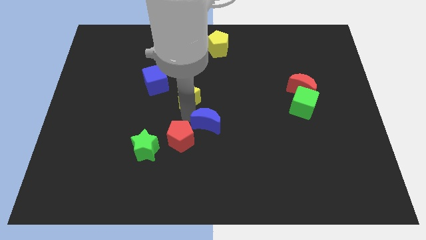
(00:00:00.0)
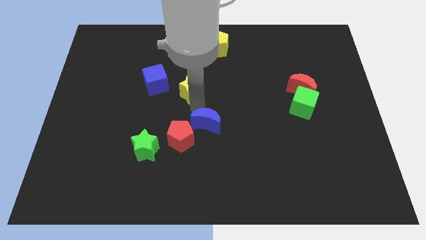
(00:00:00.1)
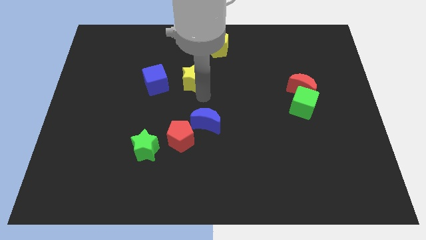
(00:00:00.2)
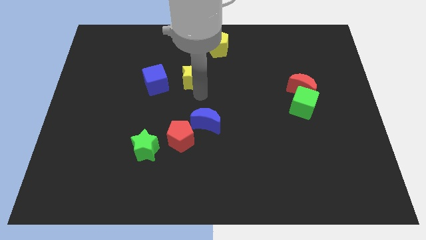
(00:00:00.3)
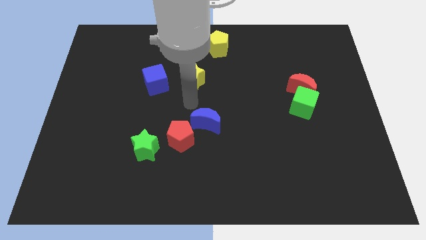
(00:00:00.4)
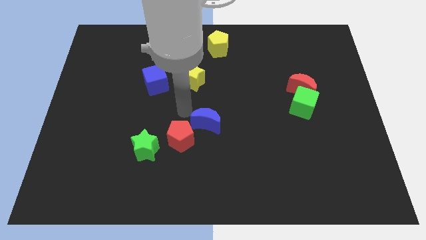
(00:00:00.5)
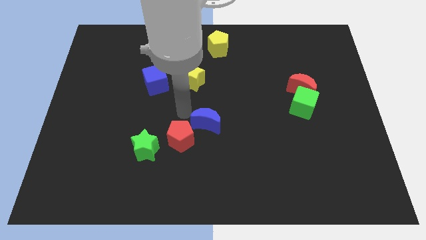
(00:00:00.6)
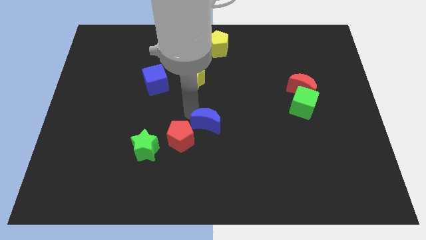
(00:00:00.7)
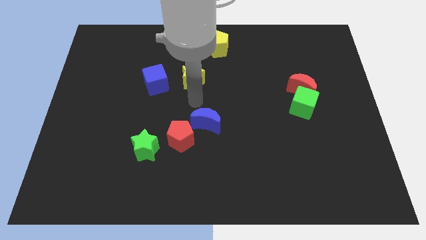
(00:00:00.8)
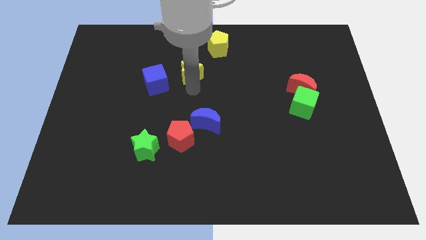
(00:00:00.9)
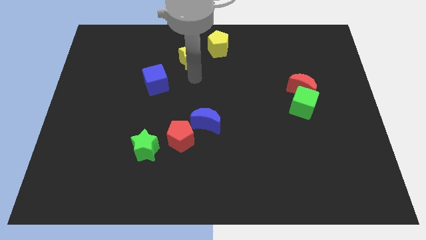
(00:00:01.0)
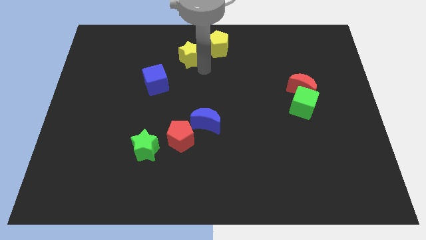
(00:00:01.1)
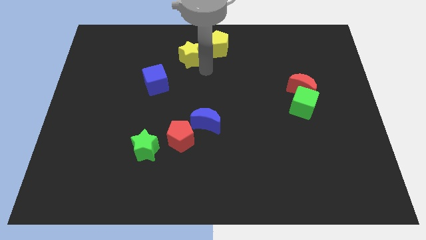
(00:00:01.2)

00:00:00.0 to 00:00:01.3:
push yellow star towards yellow pentagon

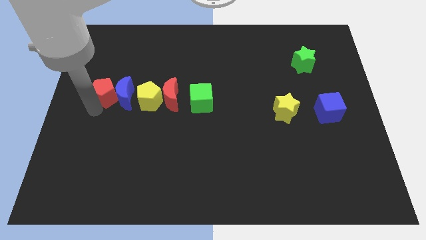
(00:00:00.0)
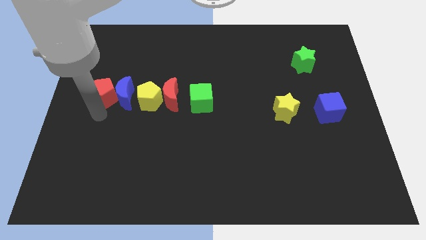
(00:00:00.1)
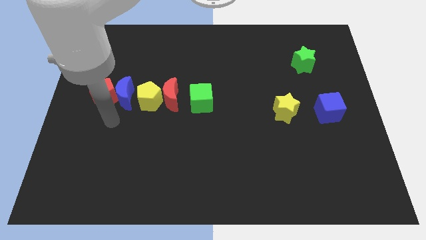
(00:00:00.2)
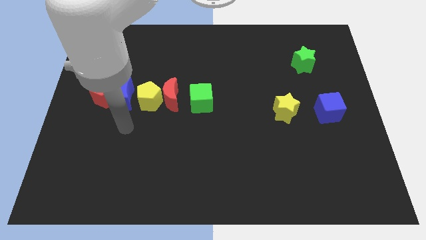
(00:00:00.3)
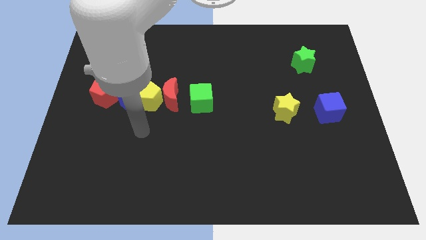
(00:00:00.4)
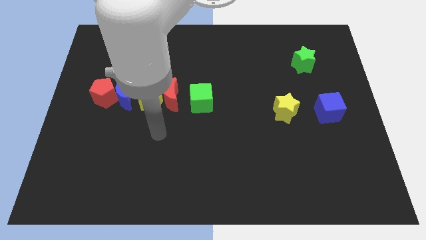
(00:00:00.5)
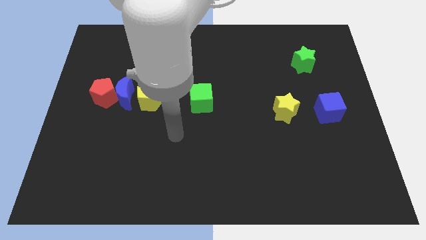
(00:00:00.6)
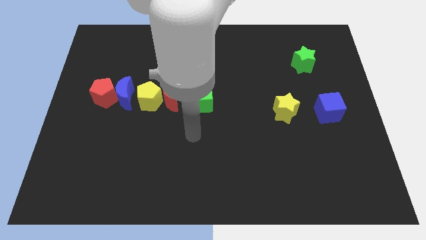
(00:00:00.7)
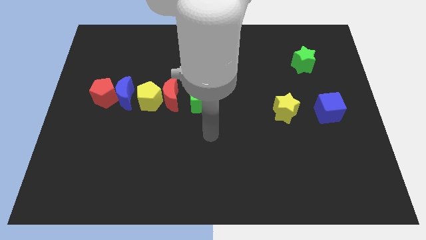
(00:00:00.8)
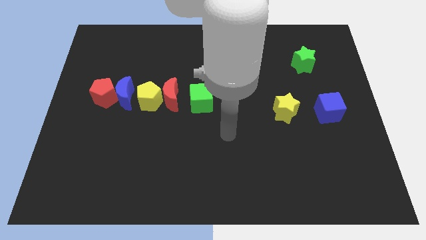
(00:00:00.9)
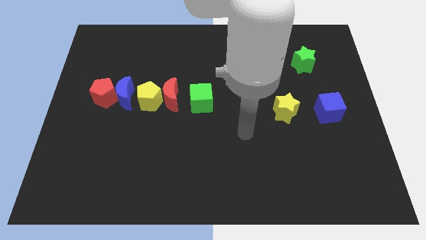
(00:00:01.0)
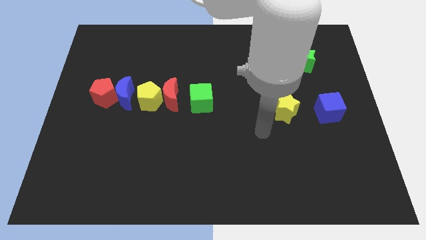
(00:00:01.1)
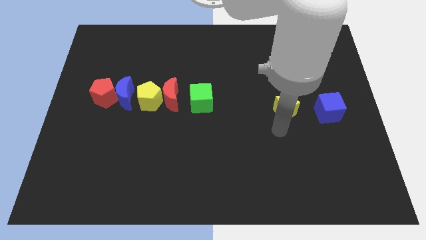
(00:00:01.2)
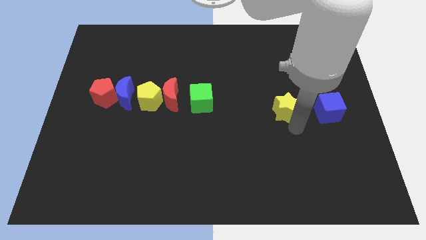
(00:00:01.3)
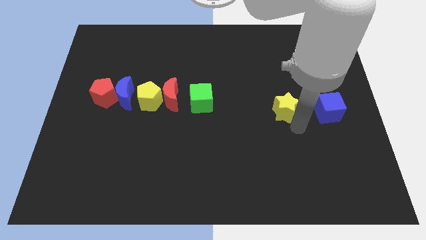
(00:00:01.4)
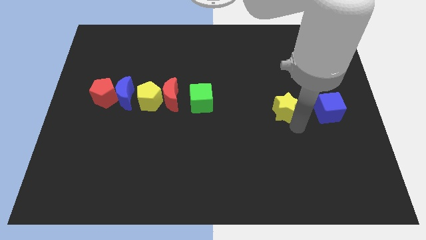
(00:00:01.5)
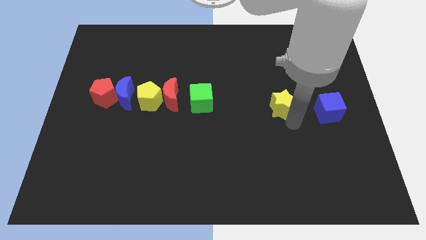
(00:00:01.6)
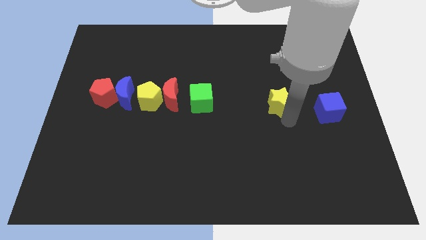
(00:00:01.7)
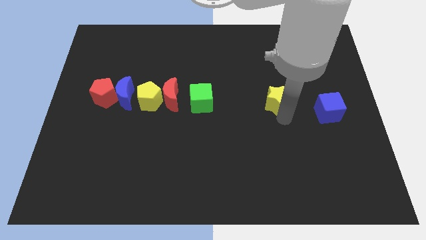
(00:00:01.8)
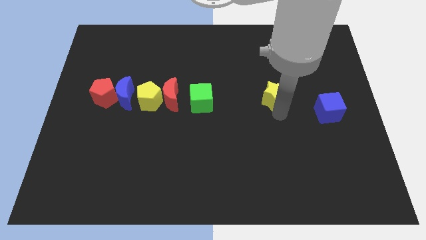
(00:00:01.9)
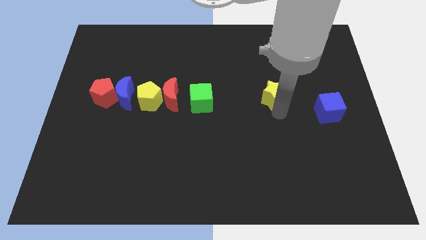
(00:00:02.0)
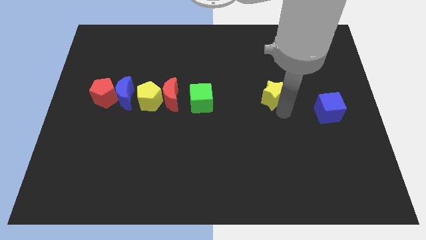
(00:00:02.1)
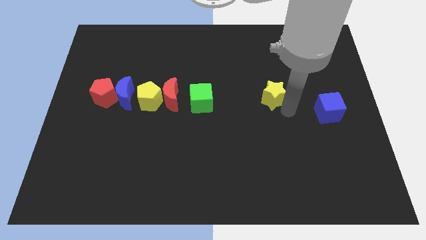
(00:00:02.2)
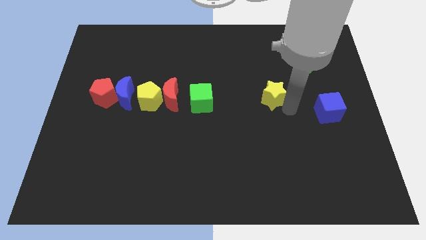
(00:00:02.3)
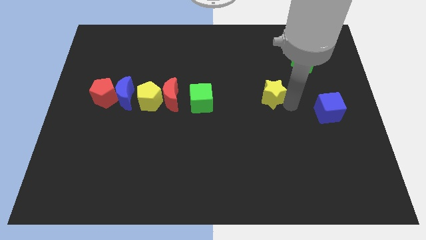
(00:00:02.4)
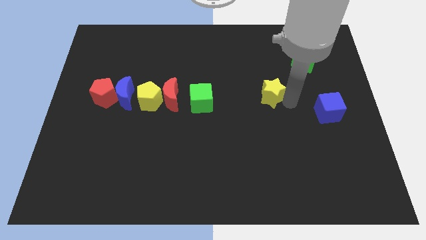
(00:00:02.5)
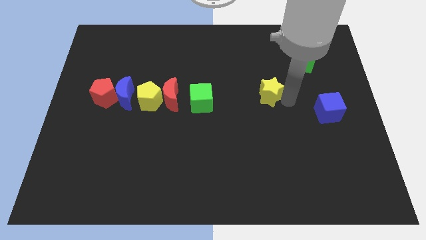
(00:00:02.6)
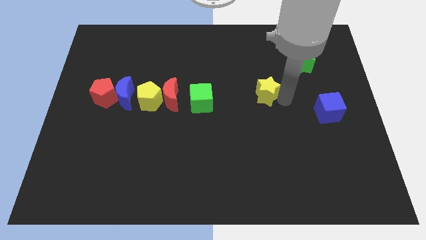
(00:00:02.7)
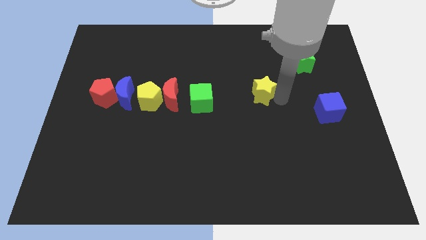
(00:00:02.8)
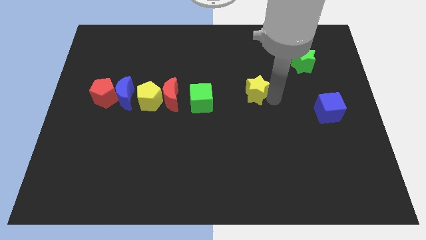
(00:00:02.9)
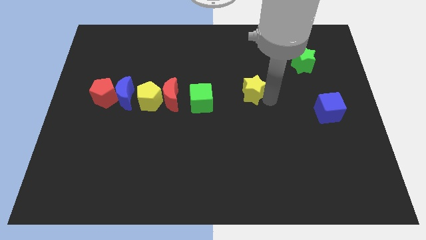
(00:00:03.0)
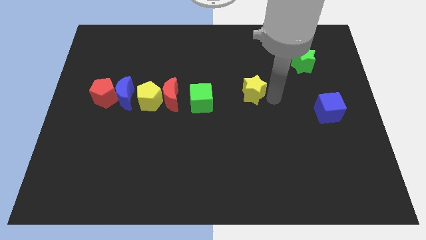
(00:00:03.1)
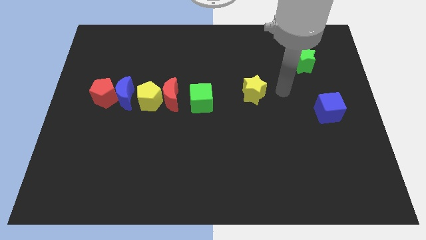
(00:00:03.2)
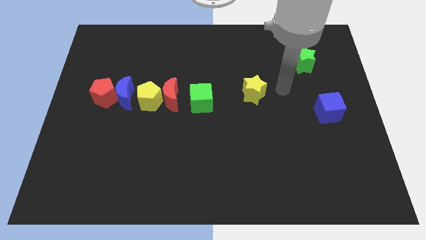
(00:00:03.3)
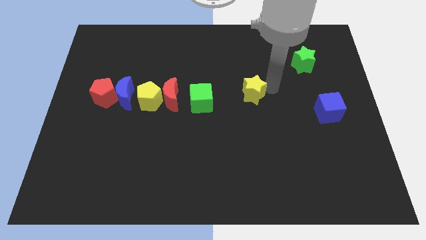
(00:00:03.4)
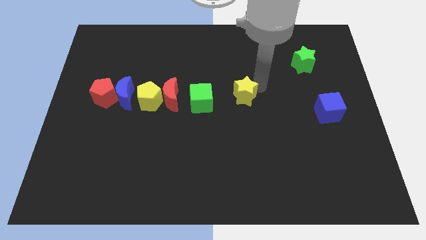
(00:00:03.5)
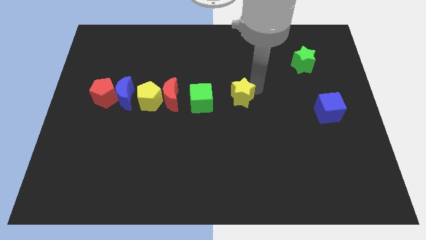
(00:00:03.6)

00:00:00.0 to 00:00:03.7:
push the yellow star towards the center of the board

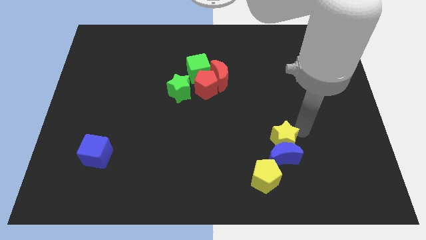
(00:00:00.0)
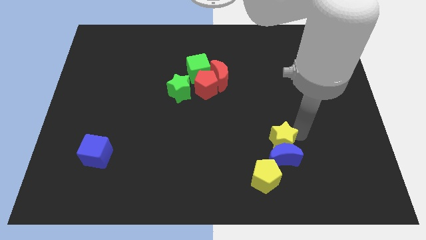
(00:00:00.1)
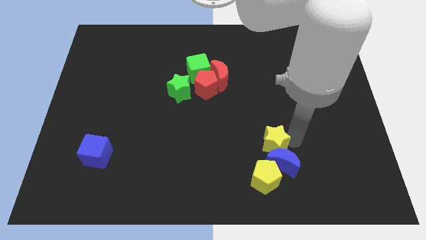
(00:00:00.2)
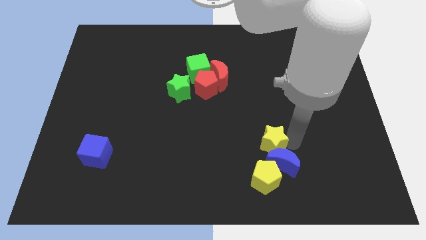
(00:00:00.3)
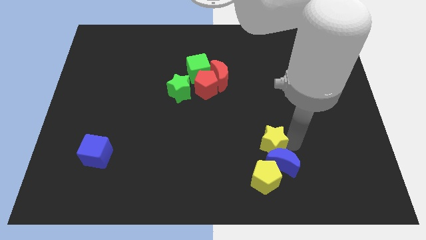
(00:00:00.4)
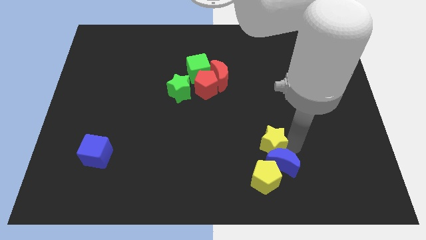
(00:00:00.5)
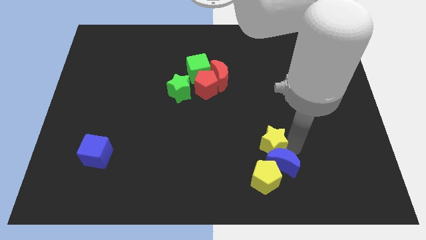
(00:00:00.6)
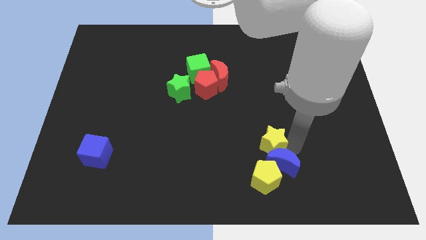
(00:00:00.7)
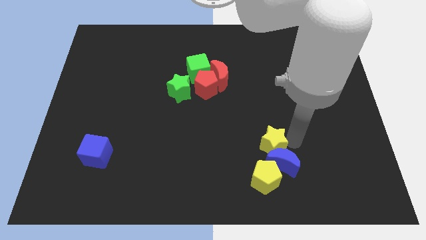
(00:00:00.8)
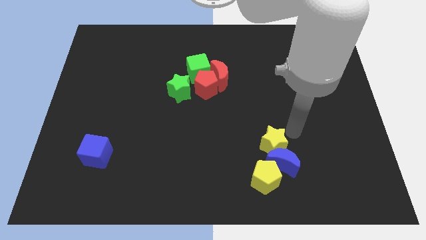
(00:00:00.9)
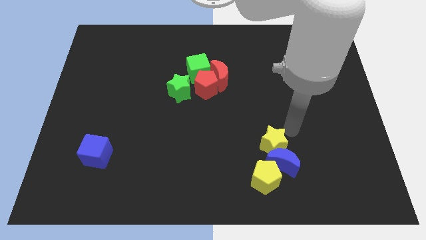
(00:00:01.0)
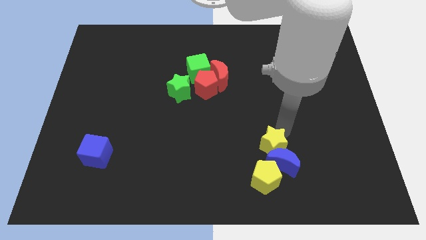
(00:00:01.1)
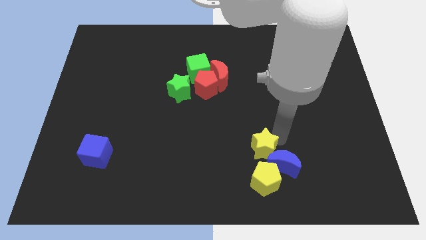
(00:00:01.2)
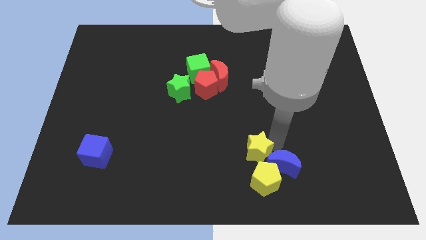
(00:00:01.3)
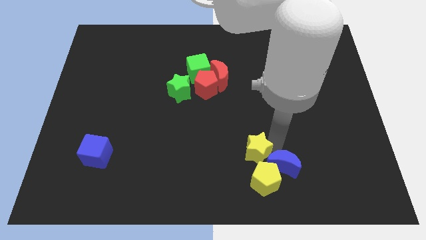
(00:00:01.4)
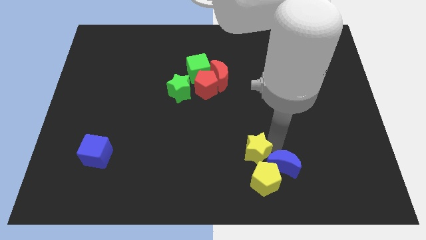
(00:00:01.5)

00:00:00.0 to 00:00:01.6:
move the yellow star towards left

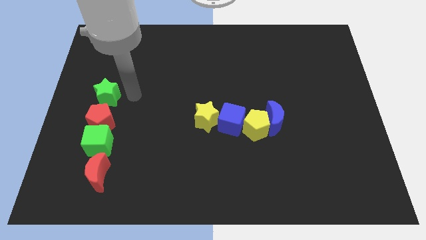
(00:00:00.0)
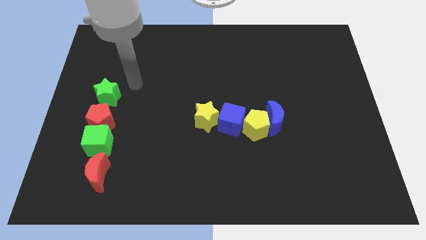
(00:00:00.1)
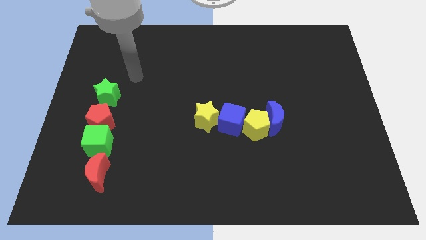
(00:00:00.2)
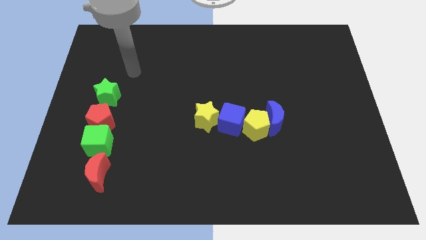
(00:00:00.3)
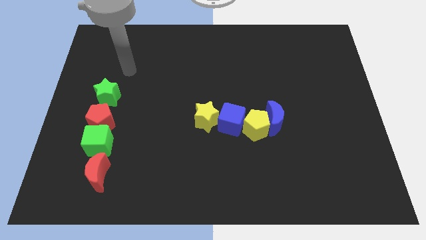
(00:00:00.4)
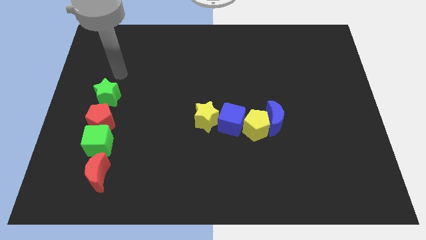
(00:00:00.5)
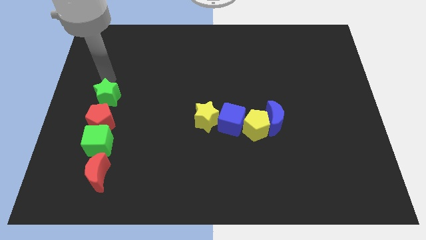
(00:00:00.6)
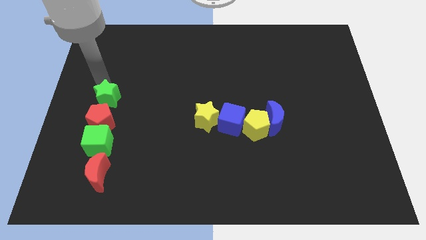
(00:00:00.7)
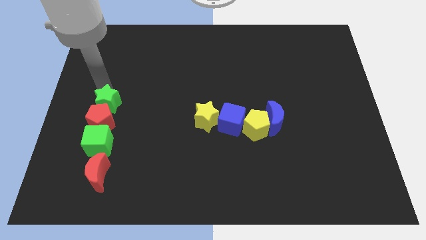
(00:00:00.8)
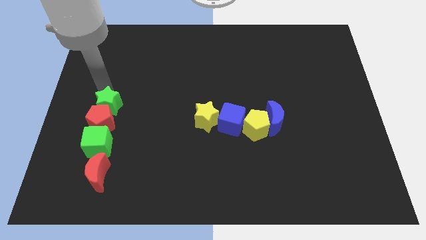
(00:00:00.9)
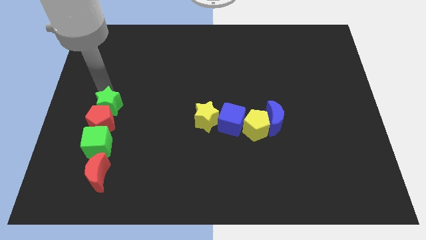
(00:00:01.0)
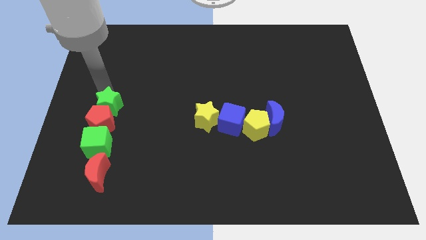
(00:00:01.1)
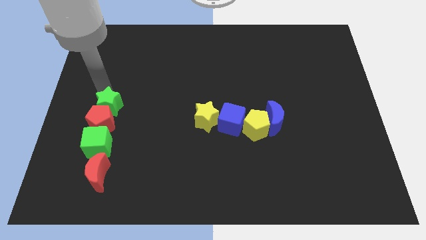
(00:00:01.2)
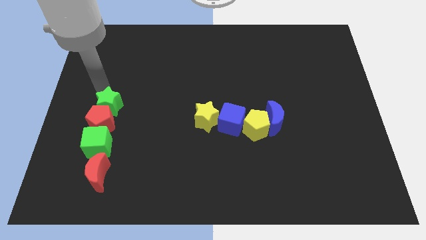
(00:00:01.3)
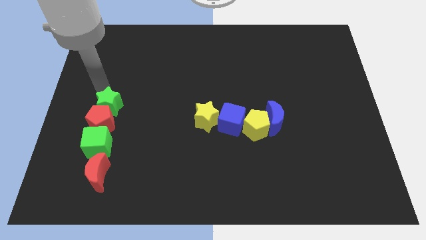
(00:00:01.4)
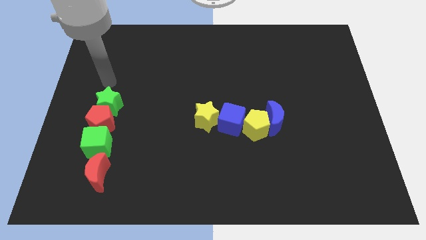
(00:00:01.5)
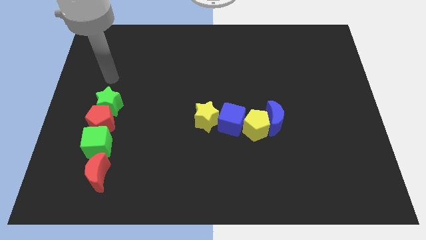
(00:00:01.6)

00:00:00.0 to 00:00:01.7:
push the green star into the red pentagon

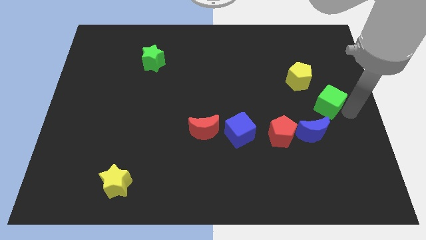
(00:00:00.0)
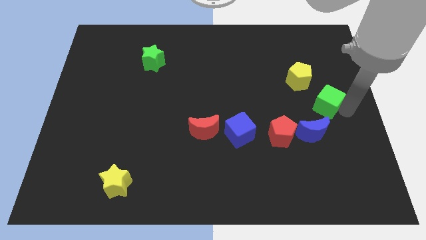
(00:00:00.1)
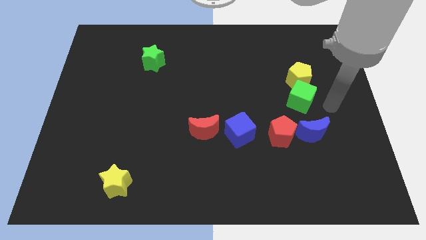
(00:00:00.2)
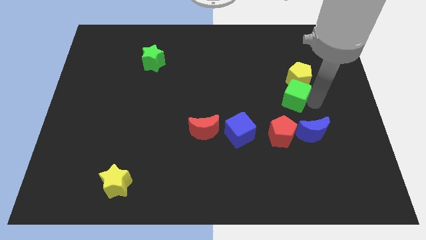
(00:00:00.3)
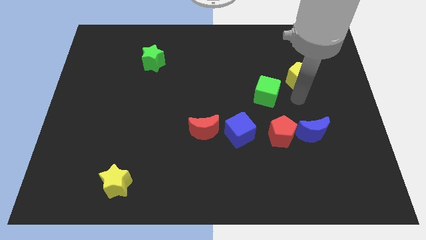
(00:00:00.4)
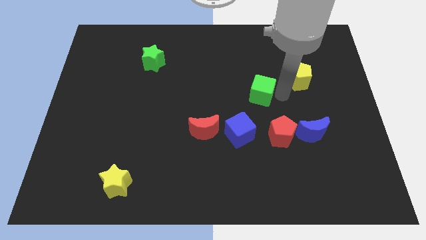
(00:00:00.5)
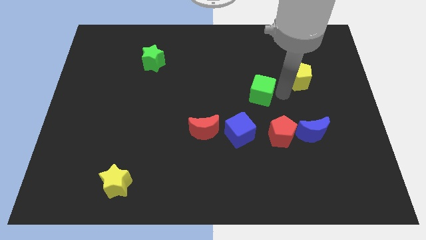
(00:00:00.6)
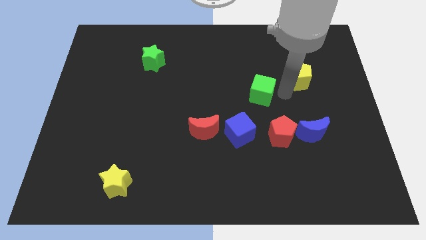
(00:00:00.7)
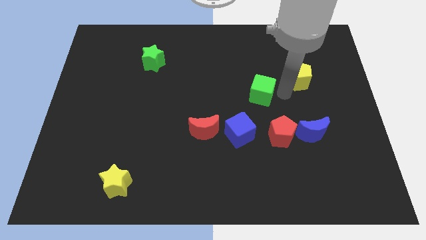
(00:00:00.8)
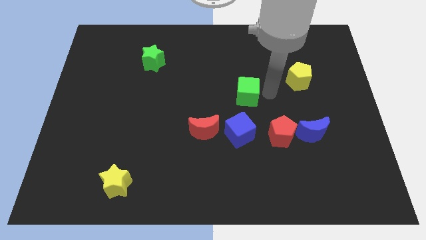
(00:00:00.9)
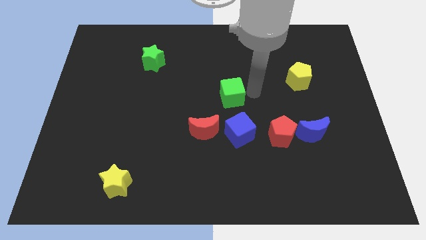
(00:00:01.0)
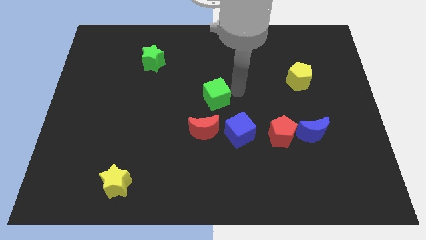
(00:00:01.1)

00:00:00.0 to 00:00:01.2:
push the green cube towards the center of the board
